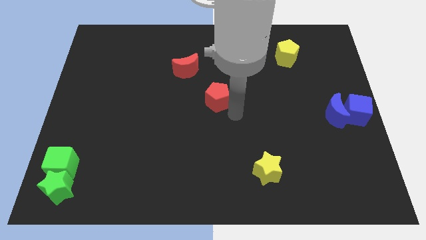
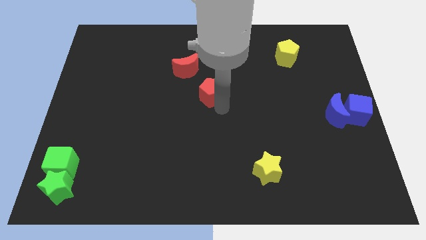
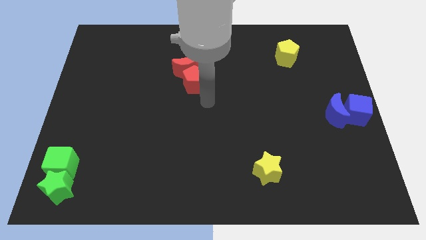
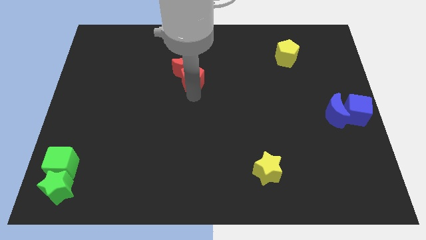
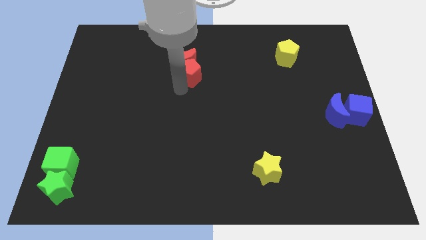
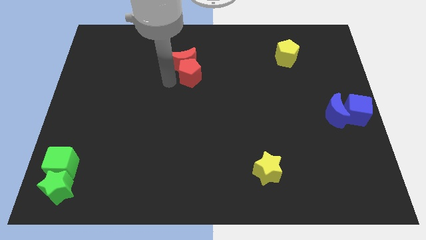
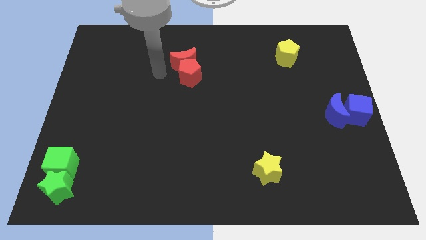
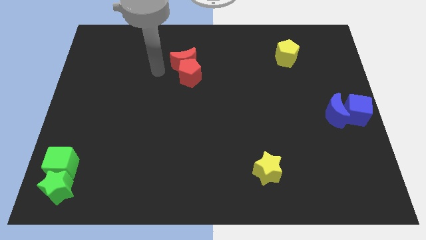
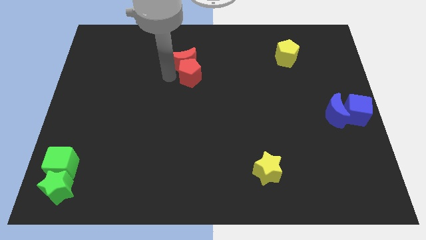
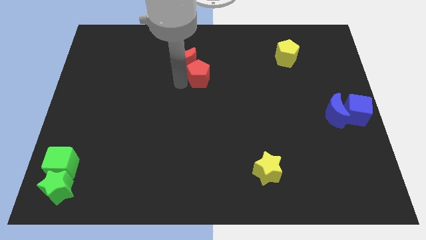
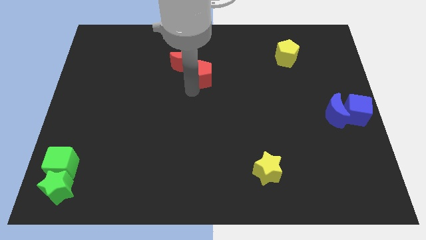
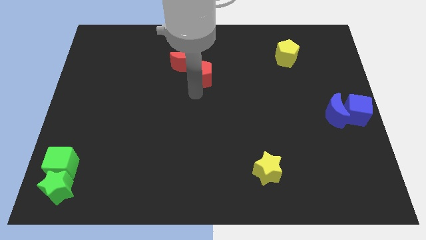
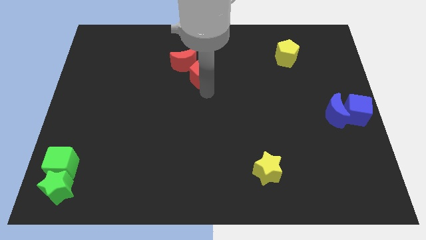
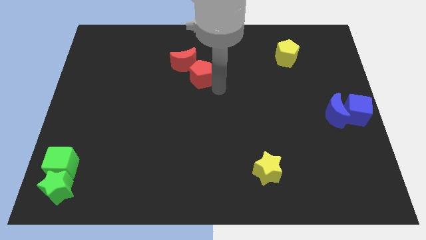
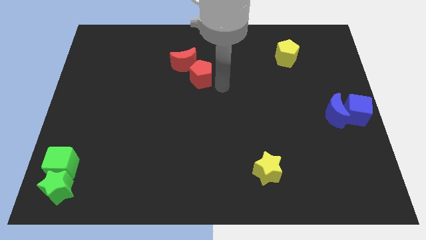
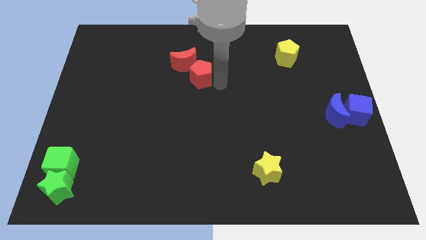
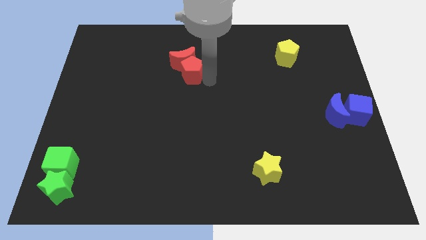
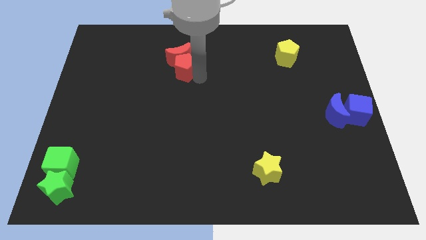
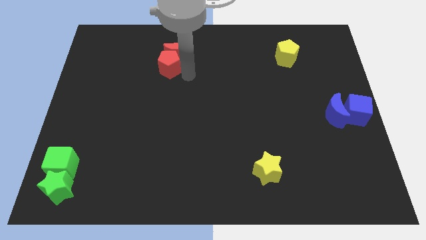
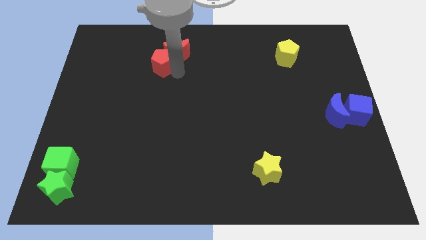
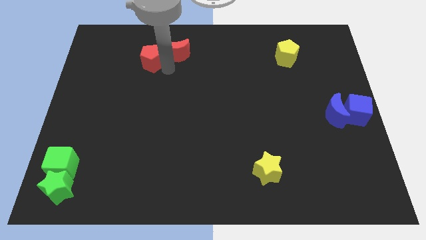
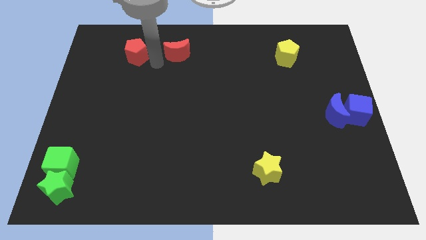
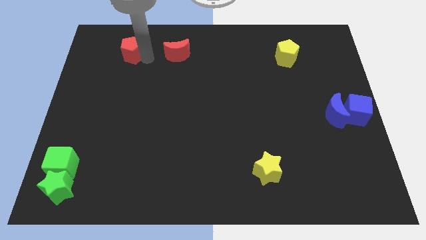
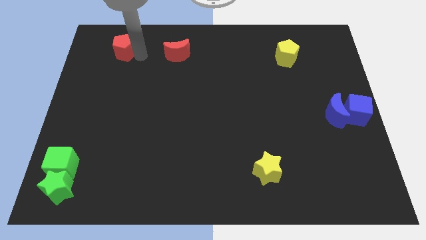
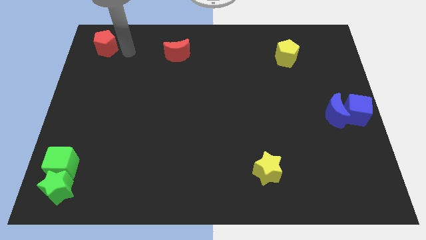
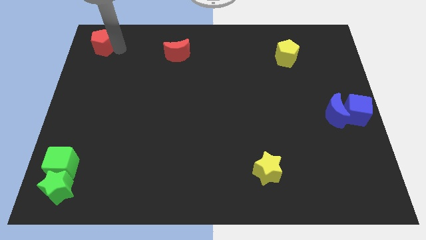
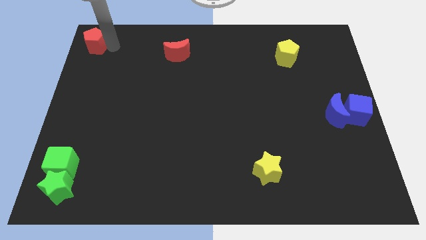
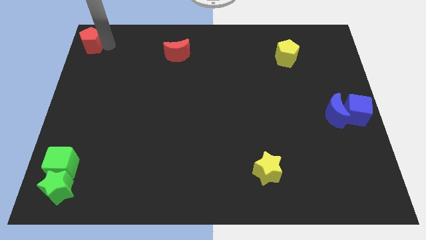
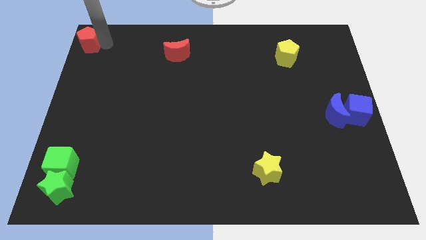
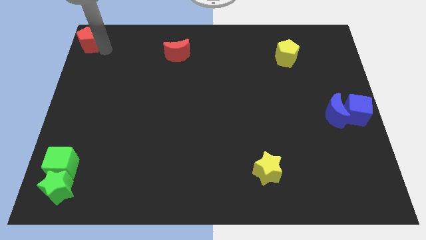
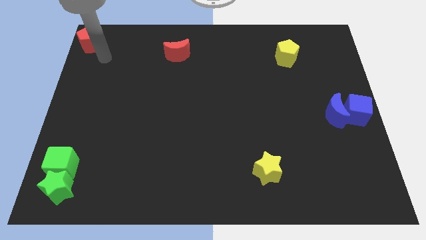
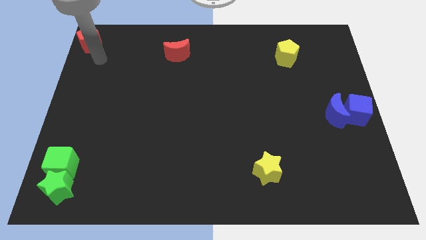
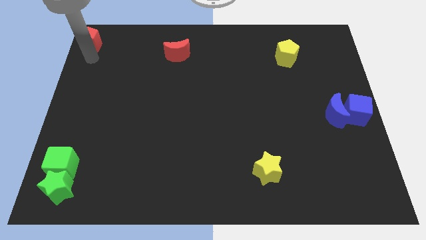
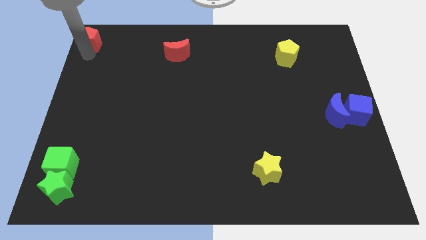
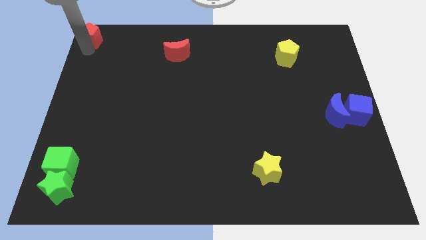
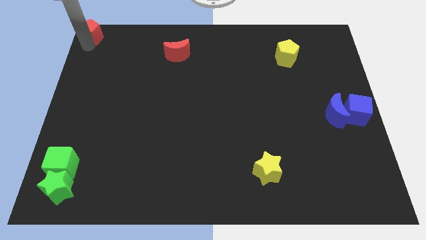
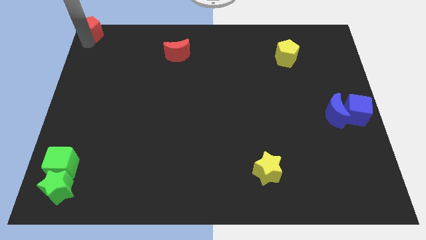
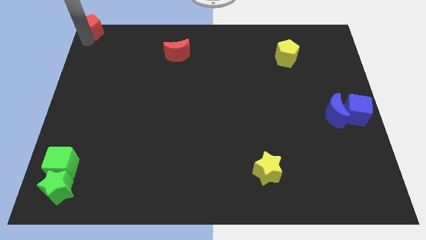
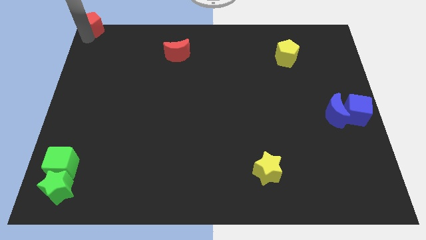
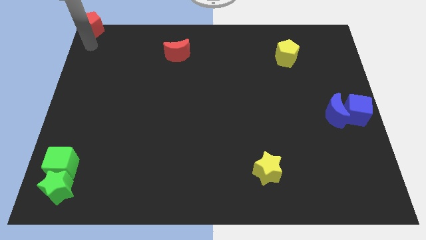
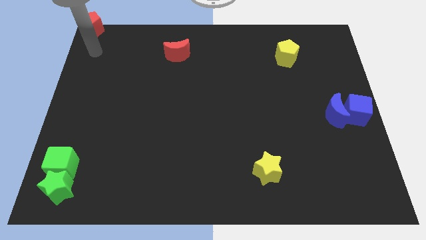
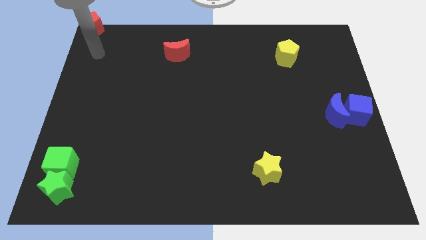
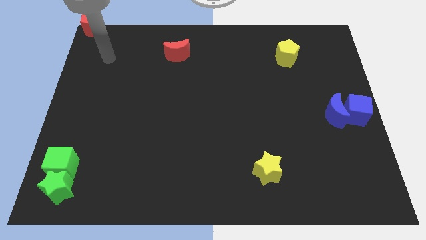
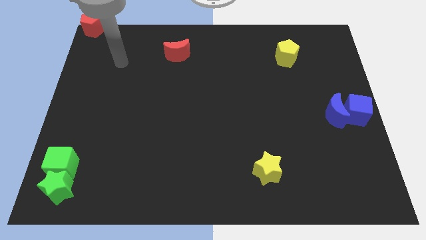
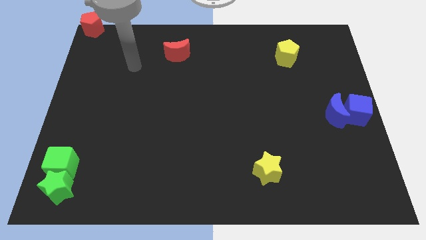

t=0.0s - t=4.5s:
move the red blocks diagonal to each other

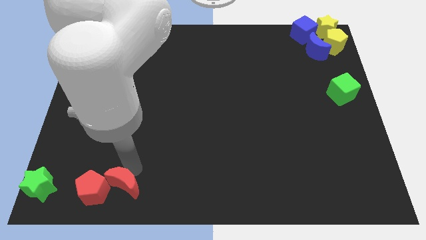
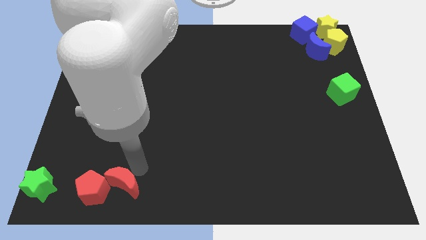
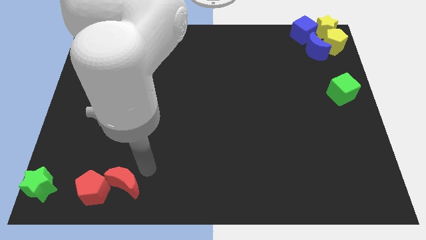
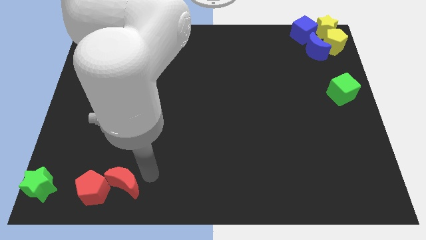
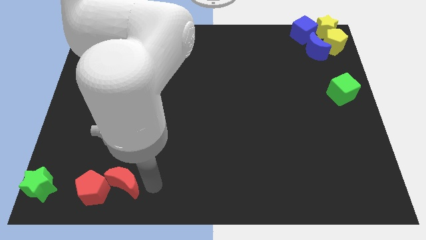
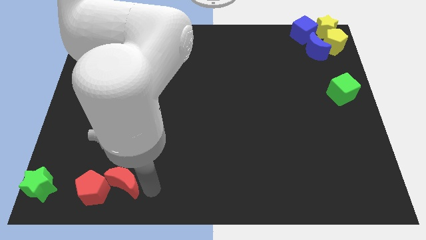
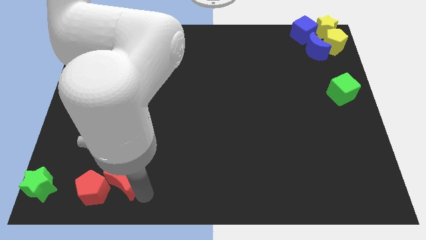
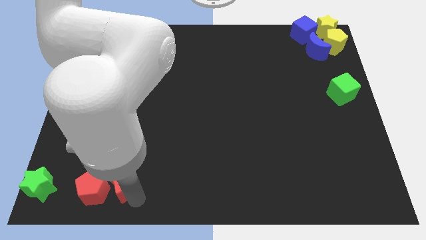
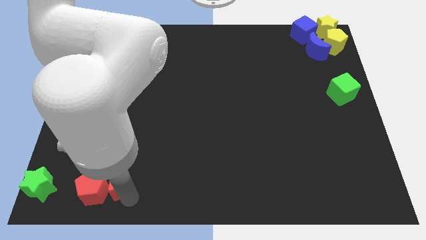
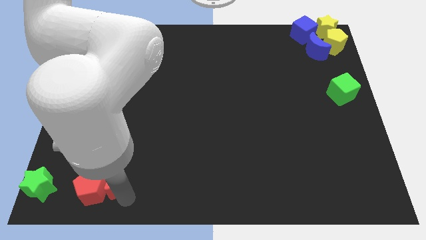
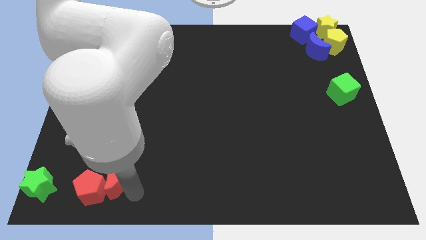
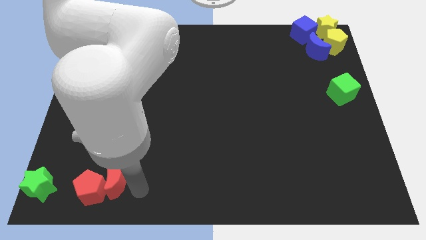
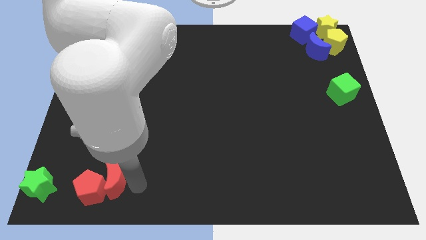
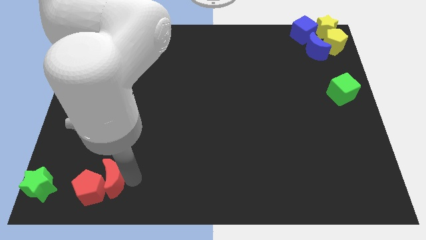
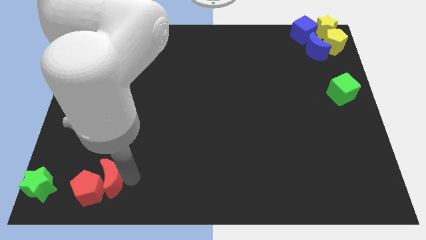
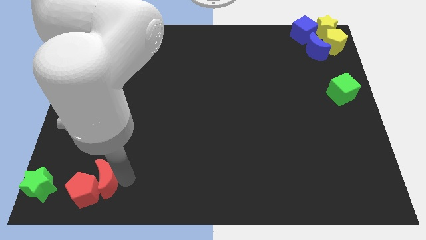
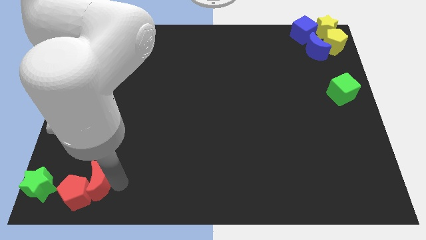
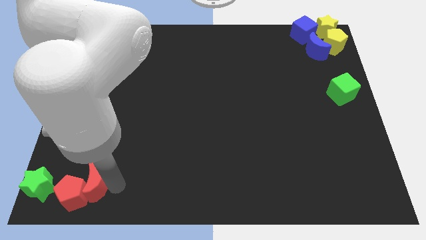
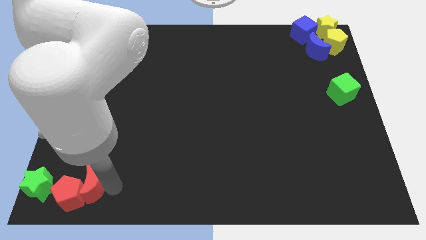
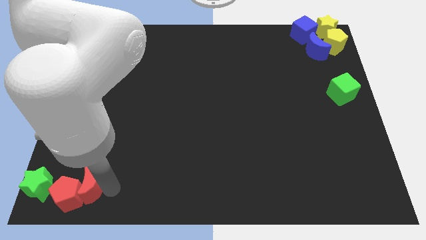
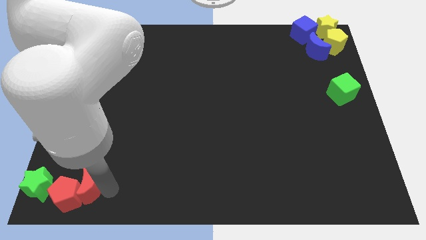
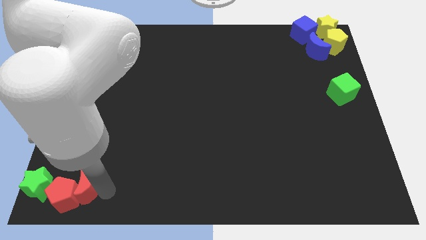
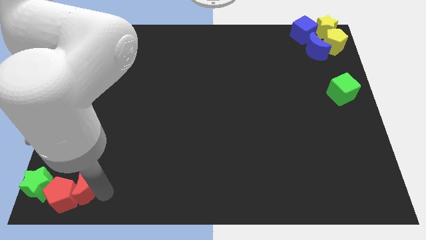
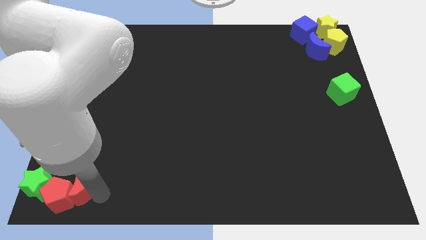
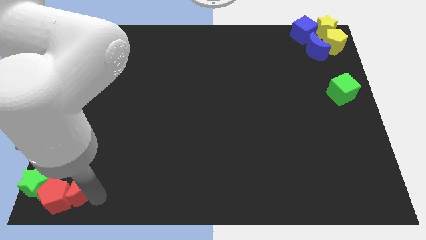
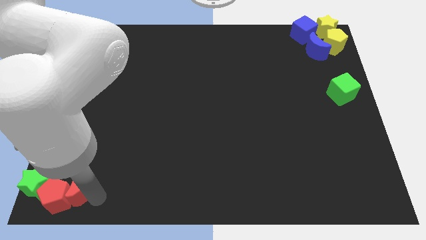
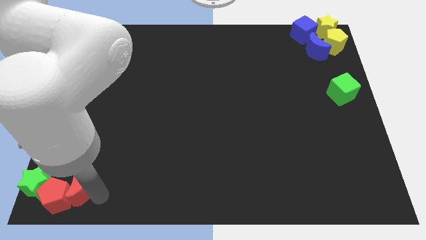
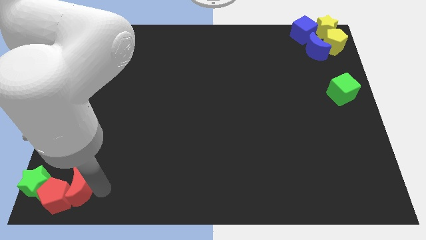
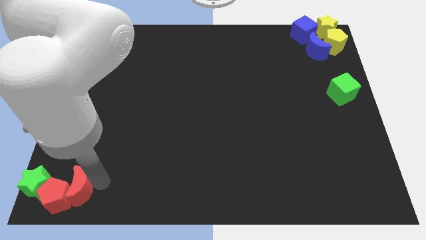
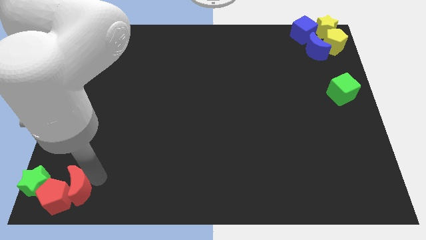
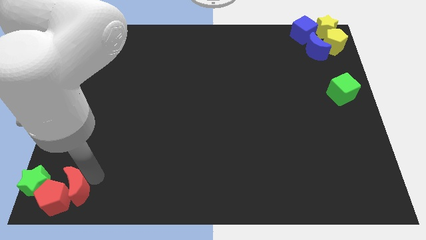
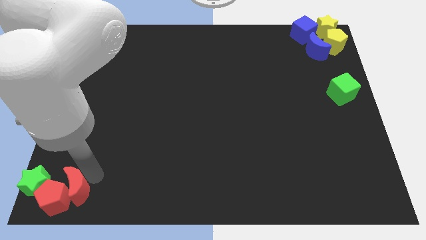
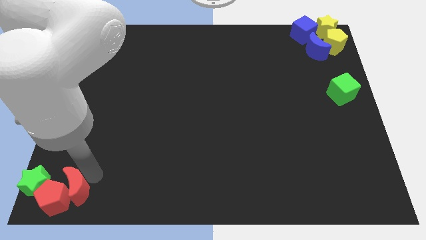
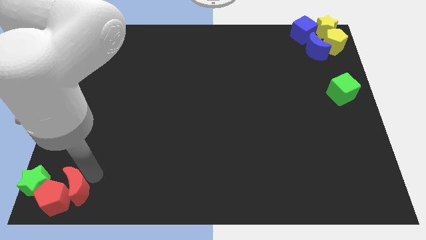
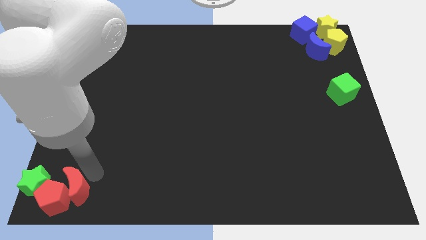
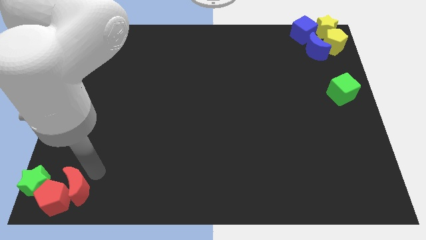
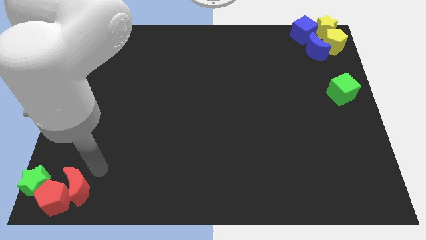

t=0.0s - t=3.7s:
move the red crescent along with red pentagon to the bottom left corner

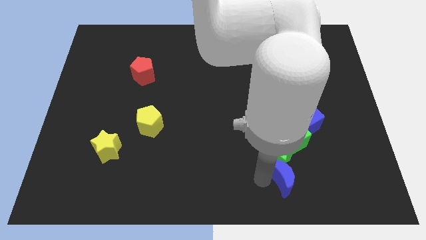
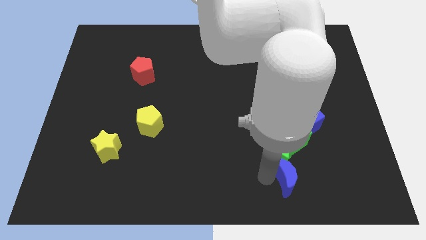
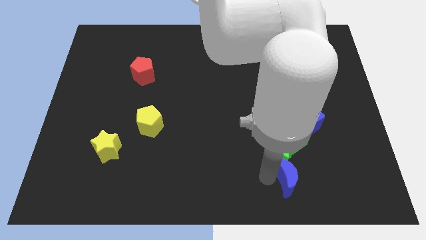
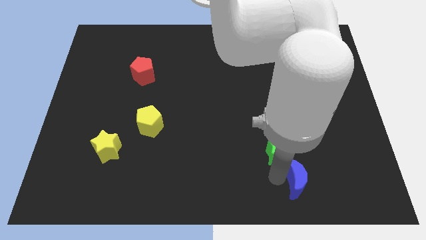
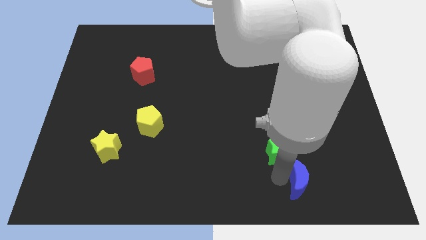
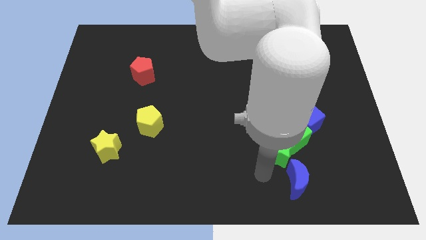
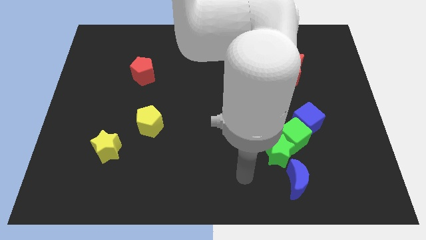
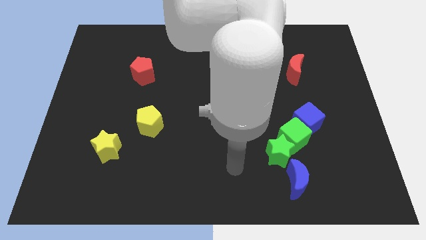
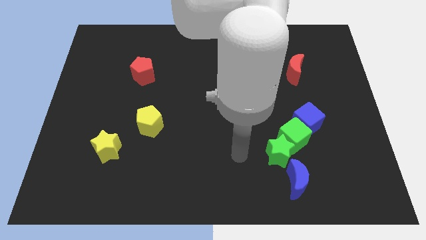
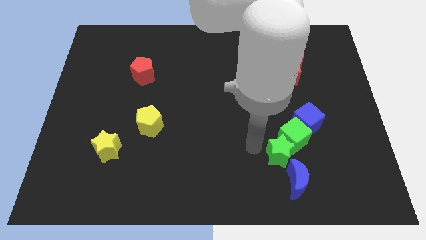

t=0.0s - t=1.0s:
move the blue moon diagonally to the bottom right of the green star
